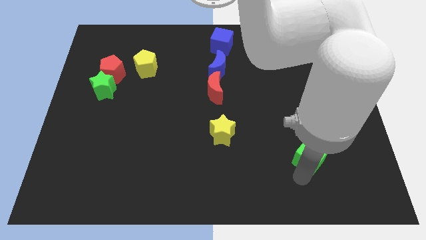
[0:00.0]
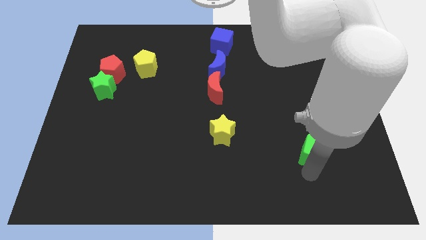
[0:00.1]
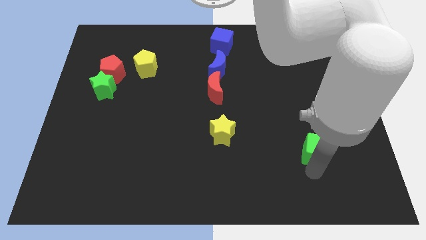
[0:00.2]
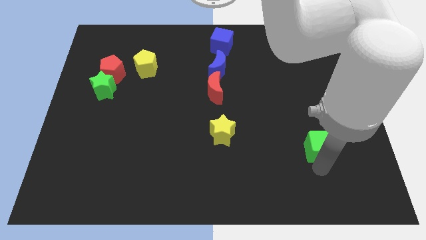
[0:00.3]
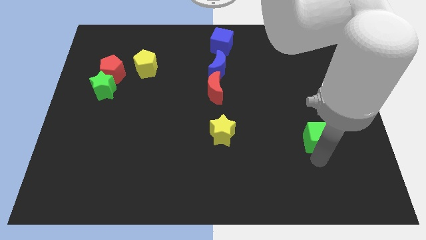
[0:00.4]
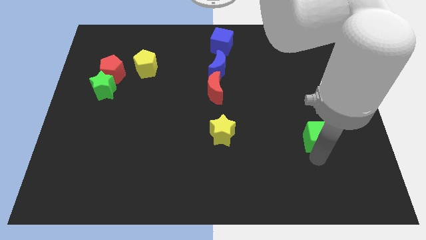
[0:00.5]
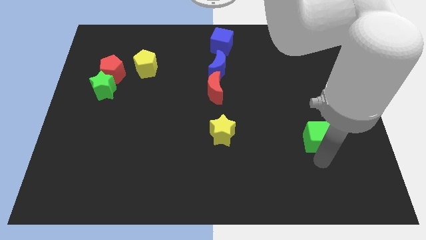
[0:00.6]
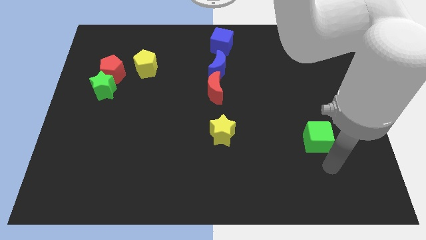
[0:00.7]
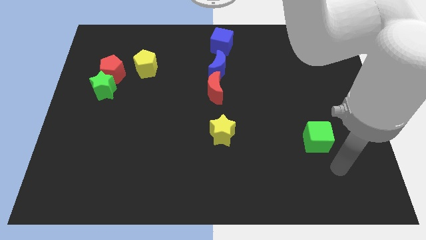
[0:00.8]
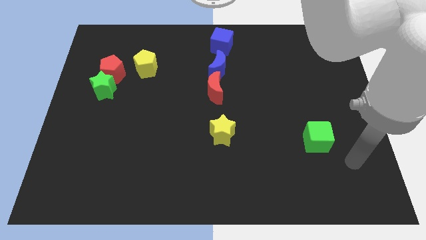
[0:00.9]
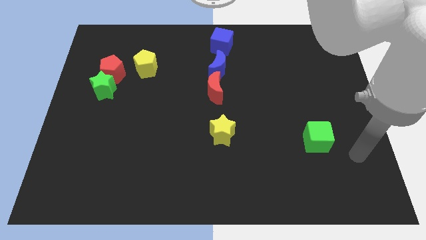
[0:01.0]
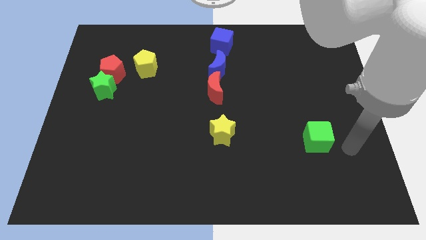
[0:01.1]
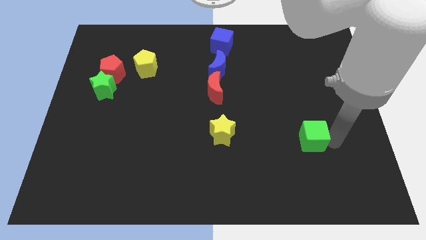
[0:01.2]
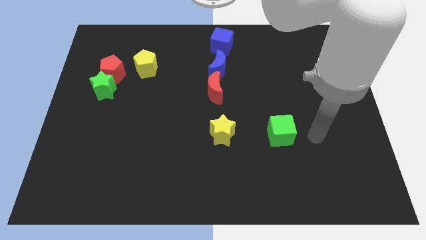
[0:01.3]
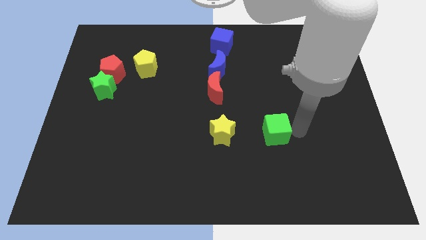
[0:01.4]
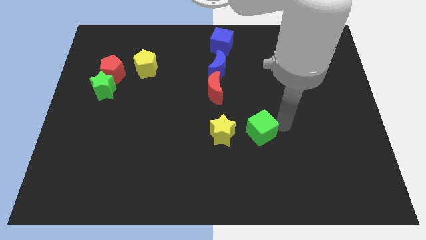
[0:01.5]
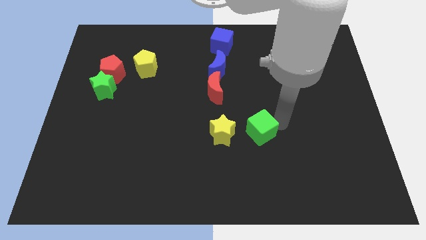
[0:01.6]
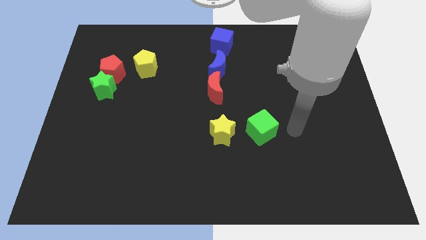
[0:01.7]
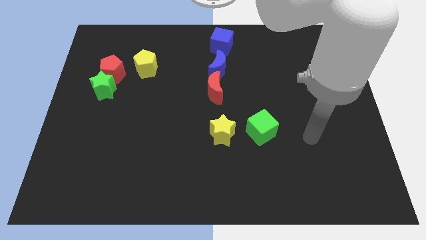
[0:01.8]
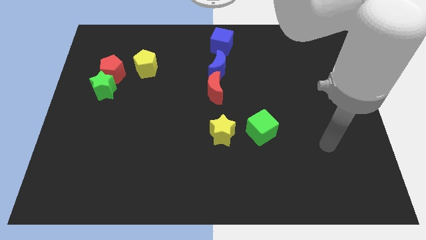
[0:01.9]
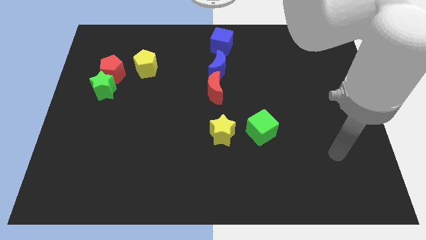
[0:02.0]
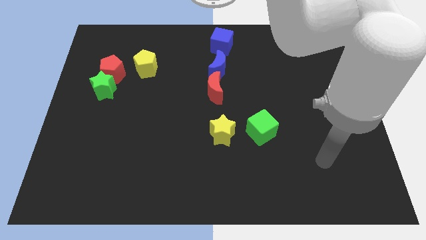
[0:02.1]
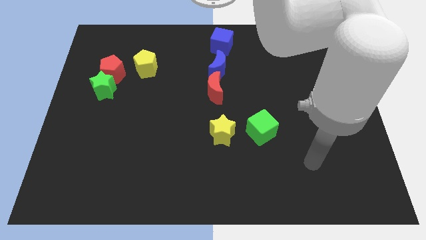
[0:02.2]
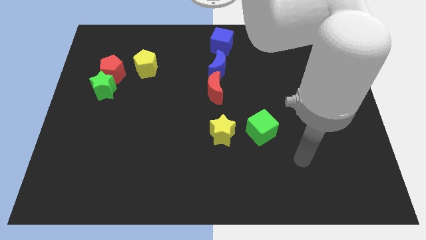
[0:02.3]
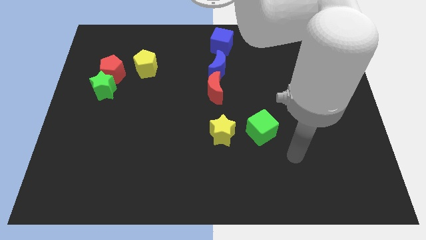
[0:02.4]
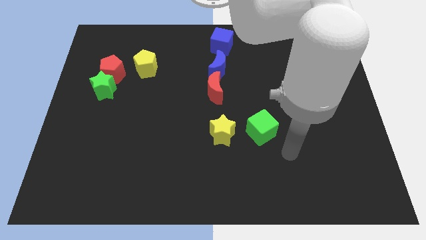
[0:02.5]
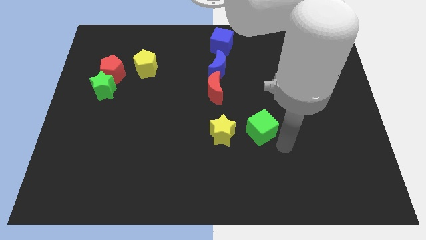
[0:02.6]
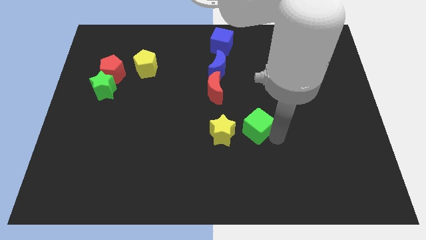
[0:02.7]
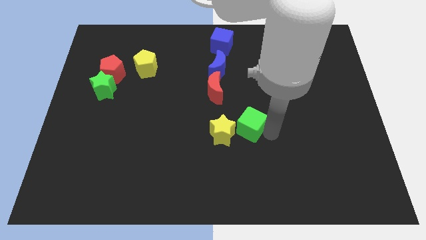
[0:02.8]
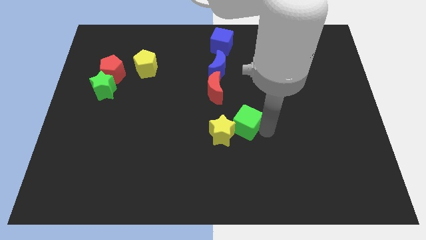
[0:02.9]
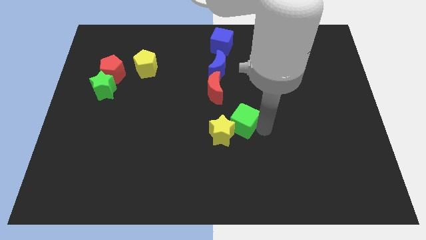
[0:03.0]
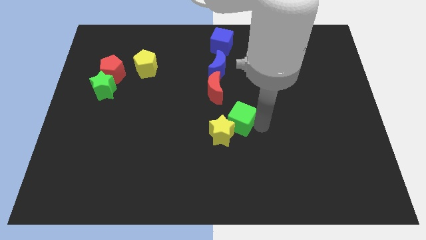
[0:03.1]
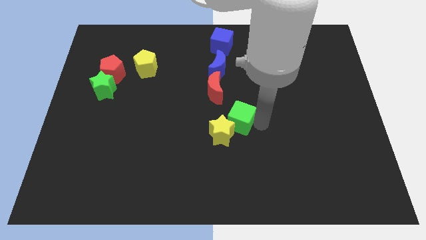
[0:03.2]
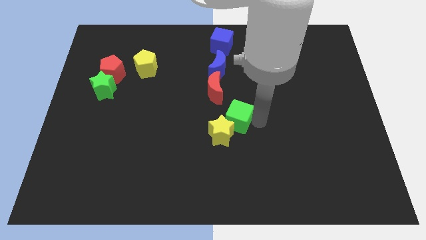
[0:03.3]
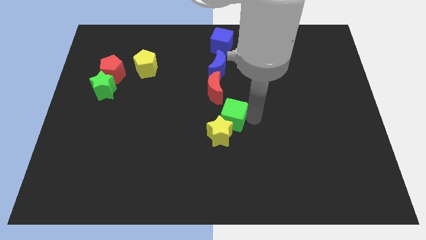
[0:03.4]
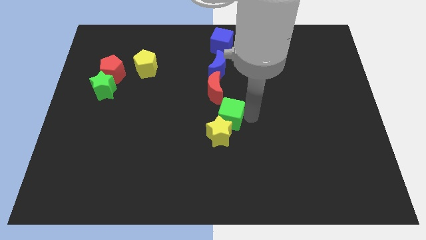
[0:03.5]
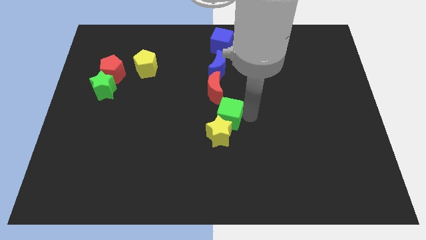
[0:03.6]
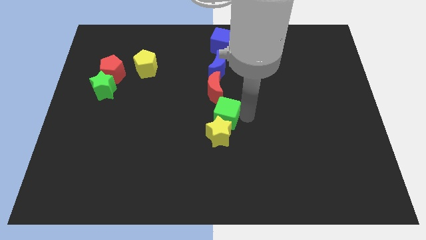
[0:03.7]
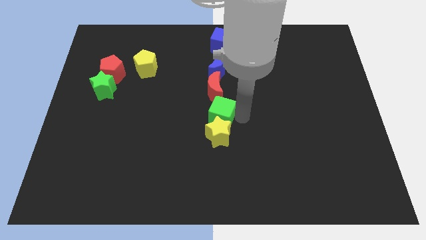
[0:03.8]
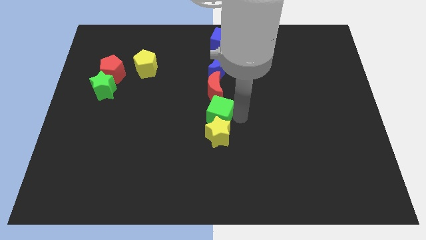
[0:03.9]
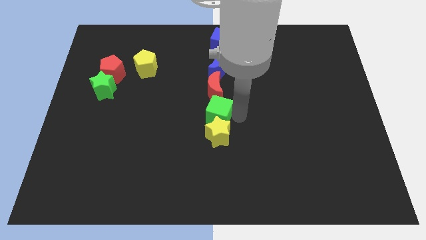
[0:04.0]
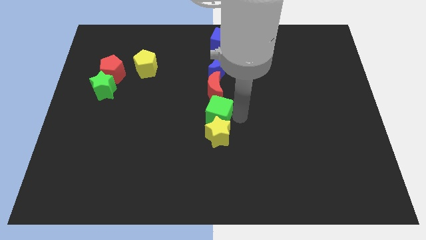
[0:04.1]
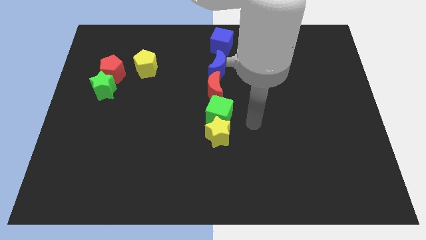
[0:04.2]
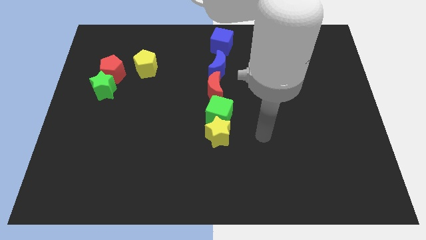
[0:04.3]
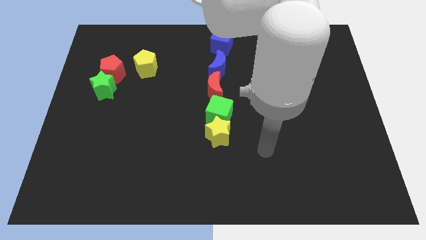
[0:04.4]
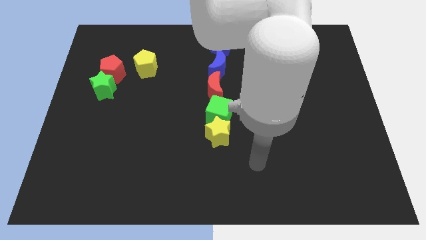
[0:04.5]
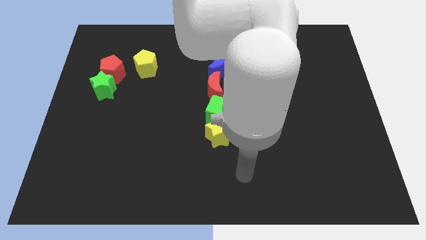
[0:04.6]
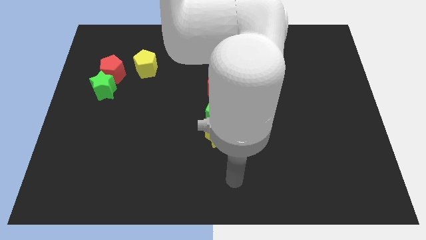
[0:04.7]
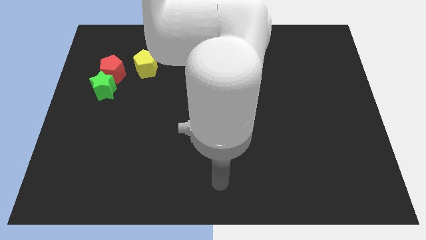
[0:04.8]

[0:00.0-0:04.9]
place the green cube above the yellow star

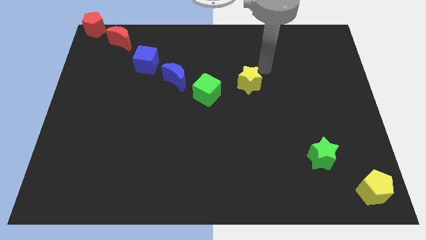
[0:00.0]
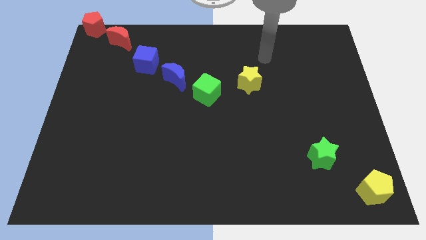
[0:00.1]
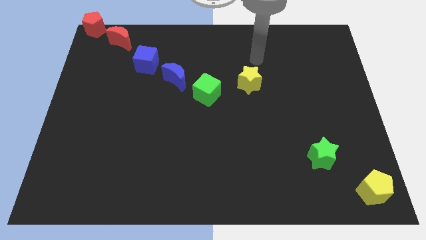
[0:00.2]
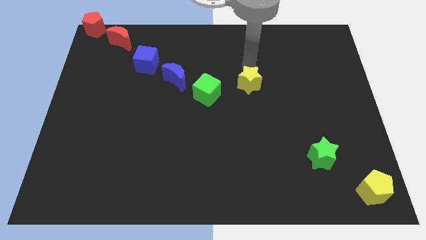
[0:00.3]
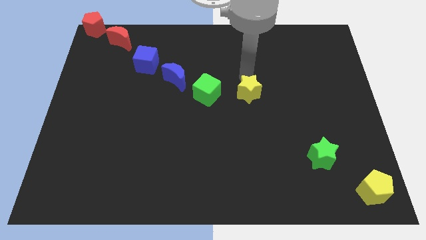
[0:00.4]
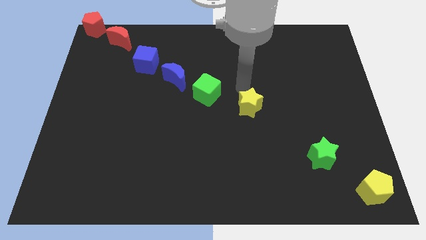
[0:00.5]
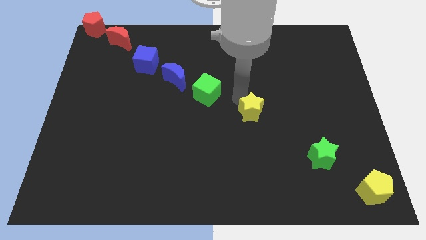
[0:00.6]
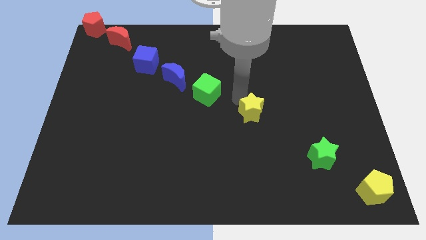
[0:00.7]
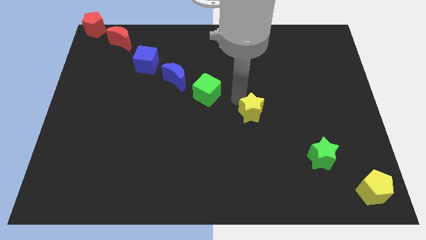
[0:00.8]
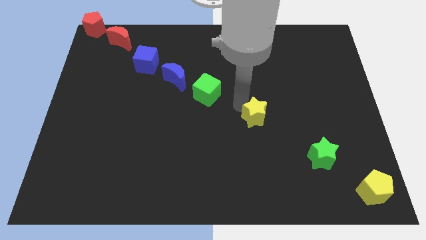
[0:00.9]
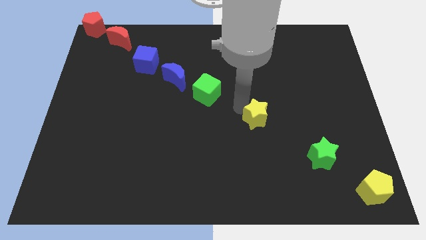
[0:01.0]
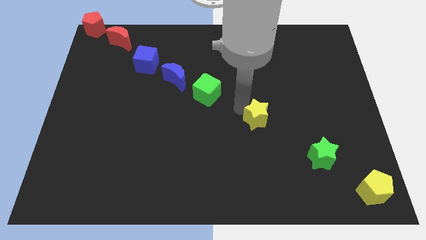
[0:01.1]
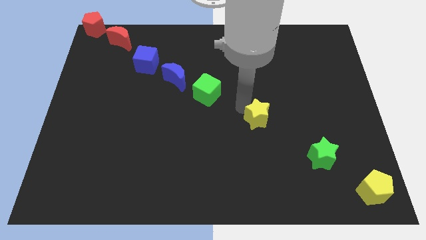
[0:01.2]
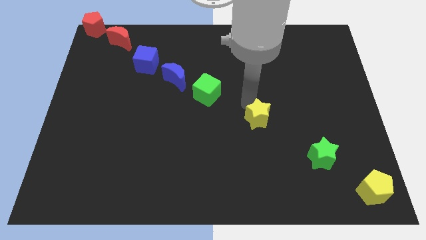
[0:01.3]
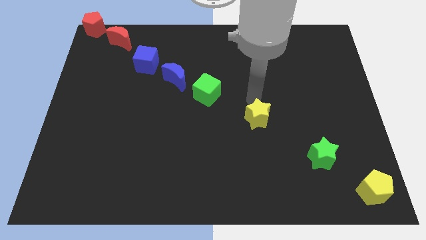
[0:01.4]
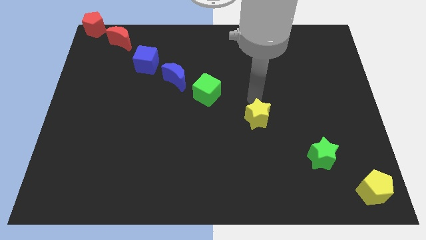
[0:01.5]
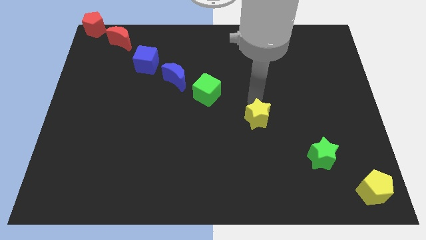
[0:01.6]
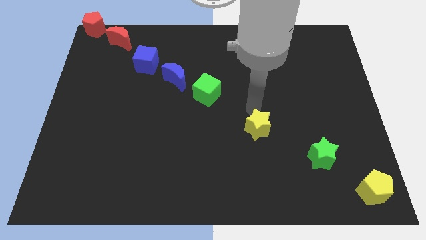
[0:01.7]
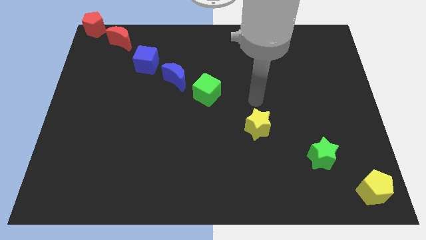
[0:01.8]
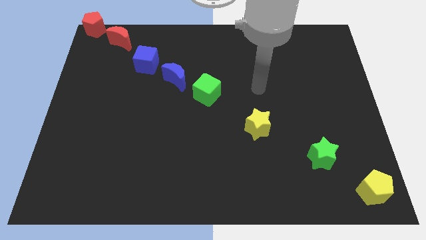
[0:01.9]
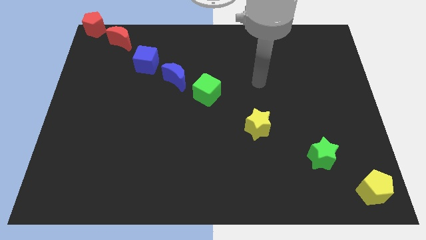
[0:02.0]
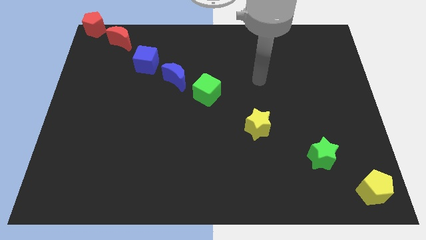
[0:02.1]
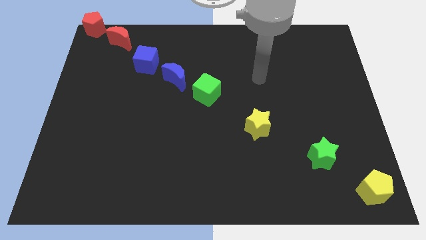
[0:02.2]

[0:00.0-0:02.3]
place the yellow star in between the green blocks

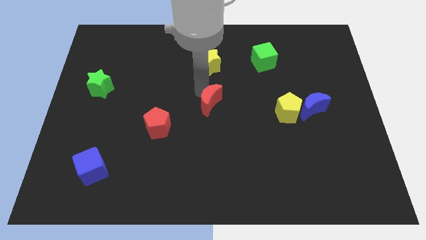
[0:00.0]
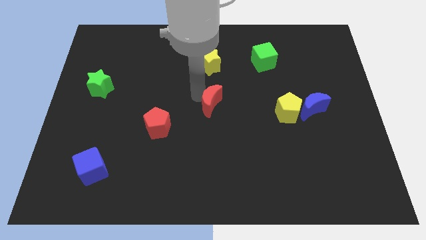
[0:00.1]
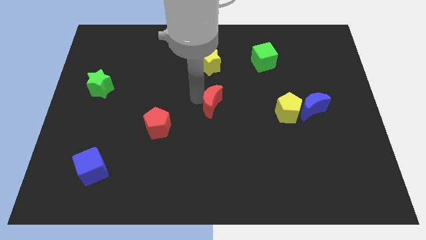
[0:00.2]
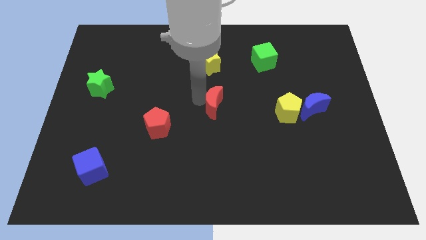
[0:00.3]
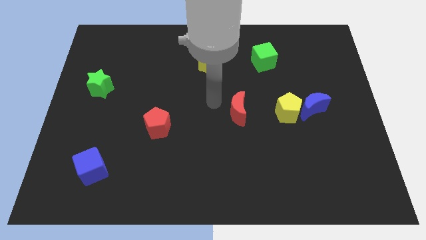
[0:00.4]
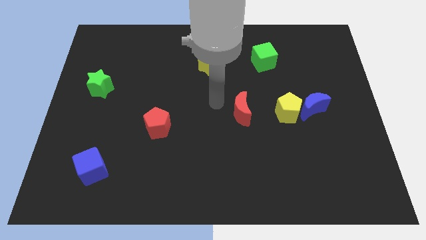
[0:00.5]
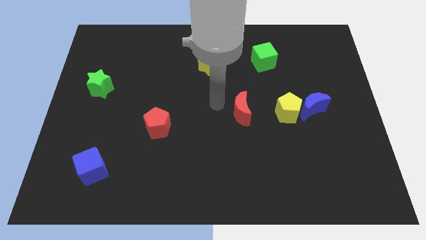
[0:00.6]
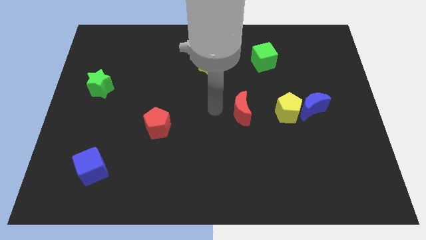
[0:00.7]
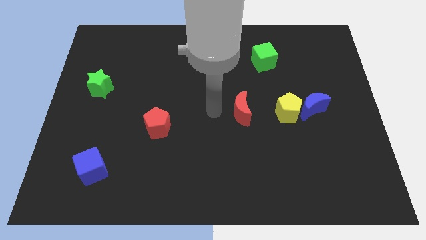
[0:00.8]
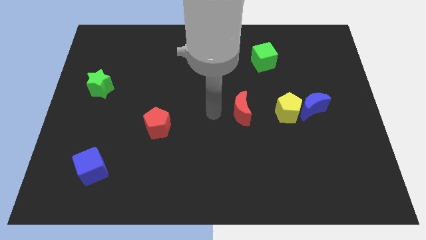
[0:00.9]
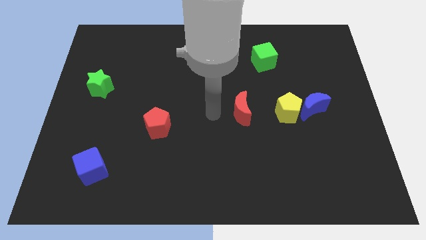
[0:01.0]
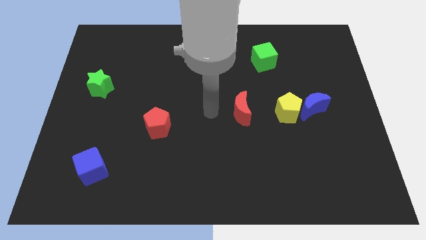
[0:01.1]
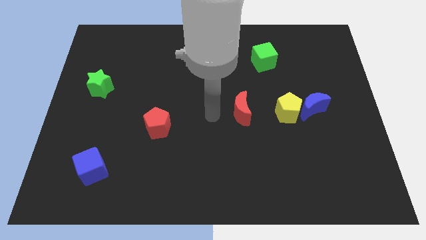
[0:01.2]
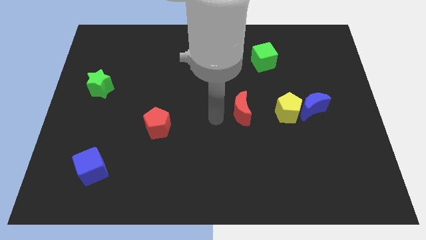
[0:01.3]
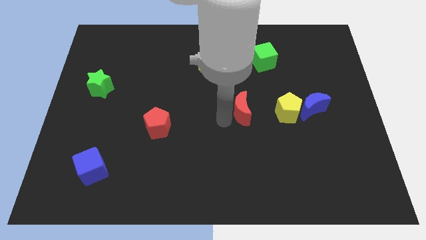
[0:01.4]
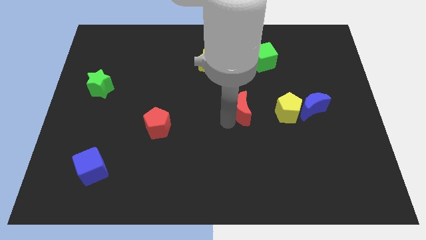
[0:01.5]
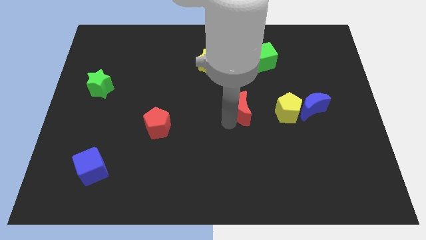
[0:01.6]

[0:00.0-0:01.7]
push the red moon diagonally bottom right to the yellow star

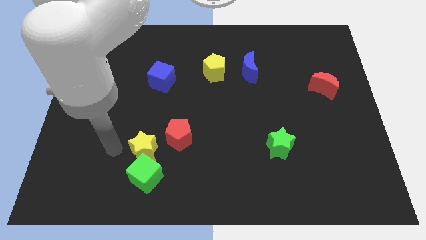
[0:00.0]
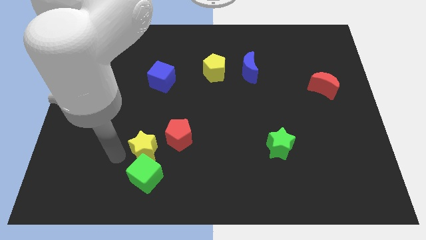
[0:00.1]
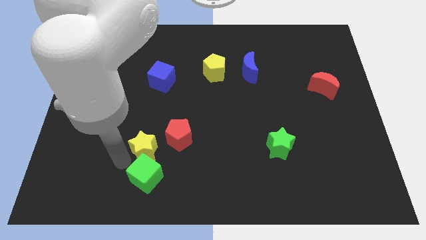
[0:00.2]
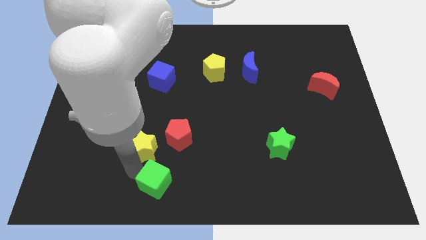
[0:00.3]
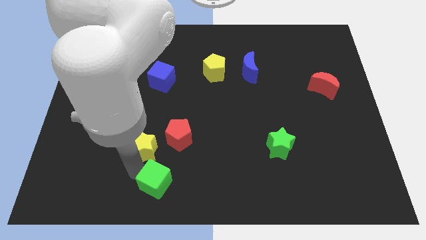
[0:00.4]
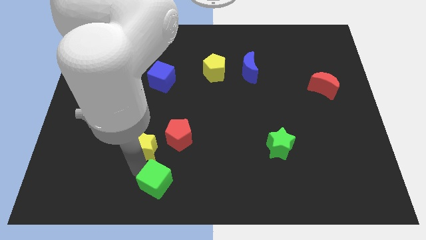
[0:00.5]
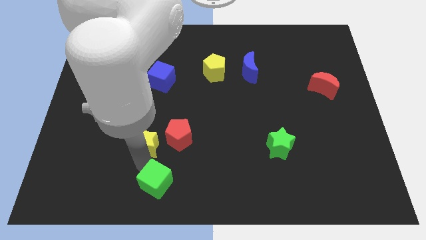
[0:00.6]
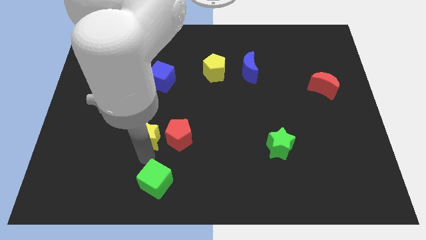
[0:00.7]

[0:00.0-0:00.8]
separate the green cube and yellow star from each other
